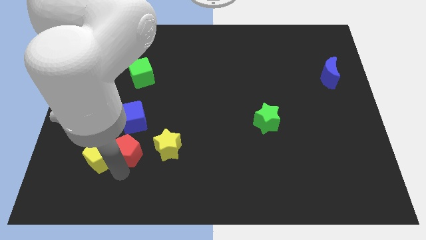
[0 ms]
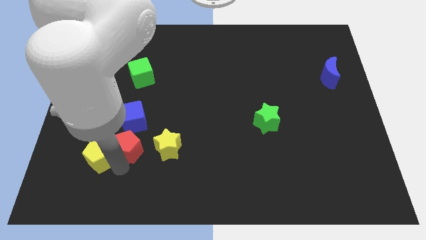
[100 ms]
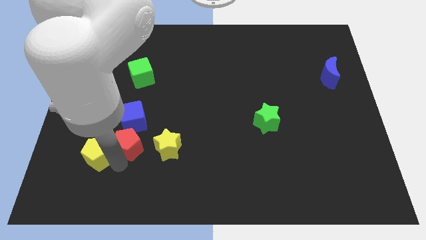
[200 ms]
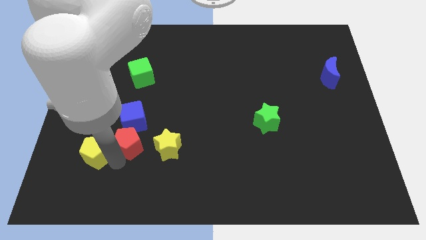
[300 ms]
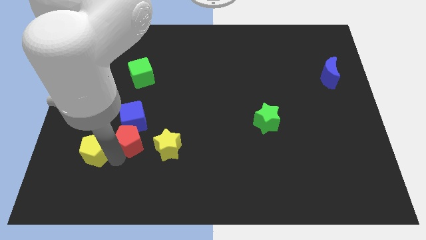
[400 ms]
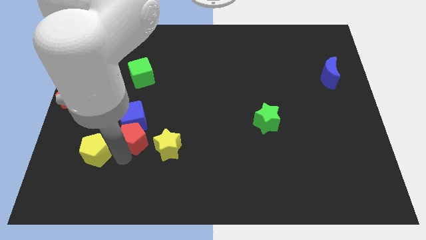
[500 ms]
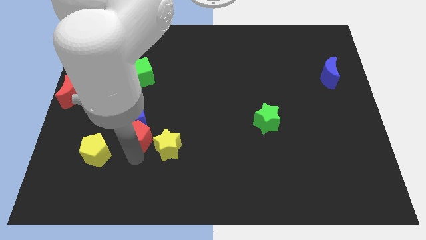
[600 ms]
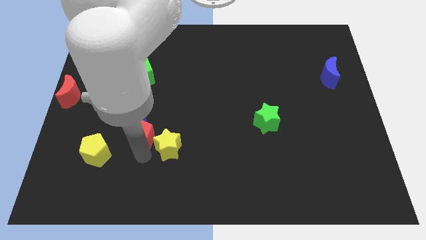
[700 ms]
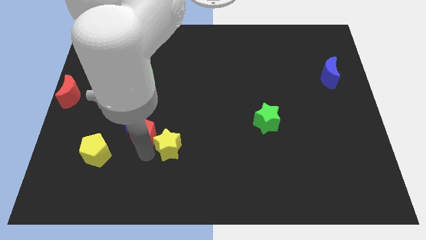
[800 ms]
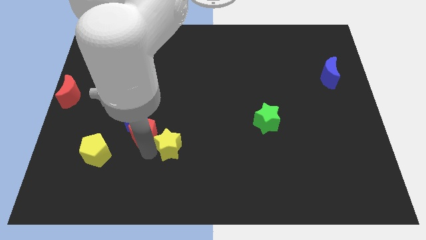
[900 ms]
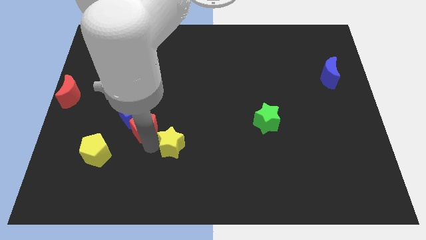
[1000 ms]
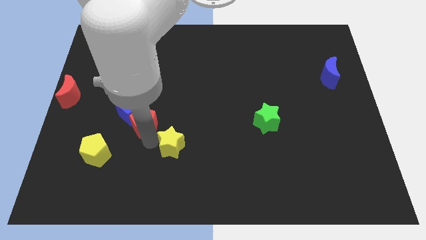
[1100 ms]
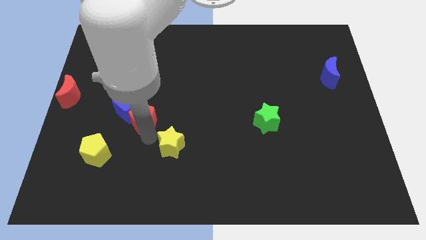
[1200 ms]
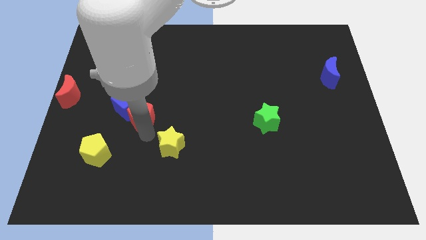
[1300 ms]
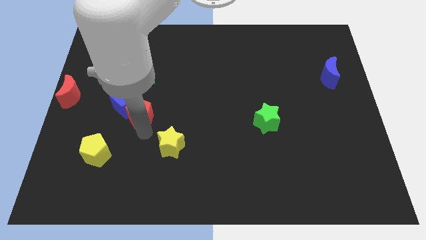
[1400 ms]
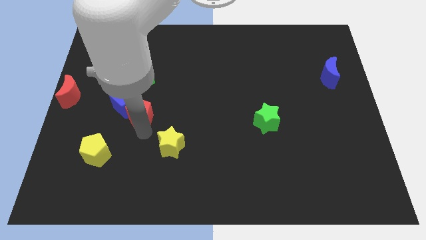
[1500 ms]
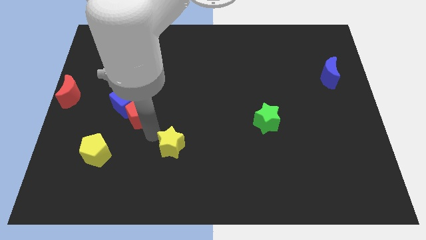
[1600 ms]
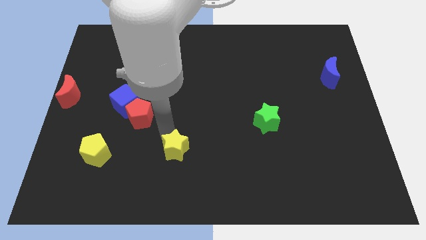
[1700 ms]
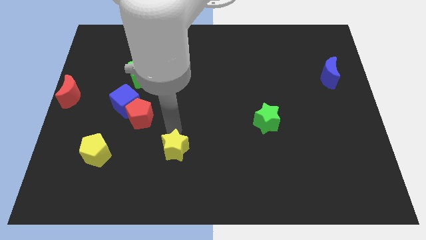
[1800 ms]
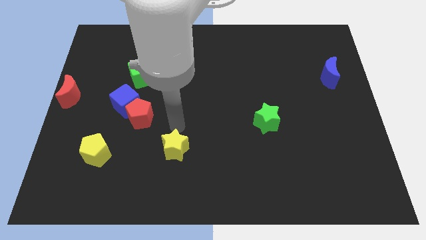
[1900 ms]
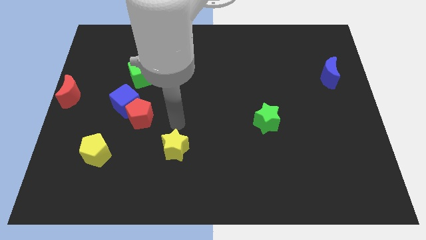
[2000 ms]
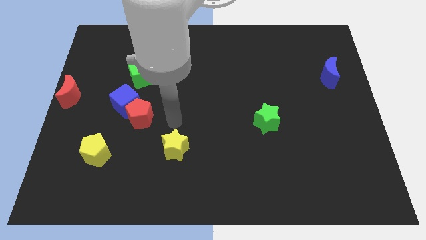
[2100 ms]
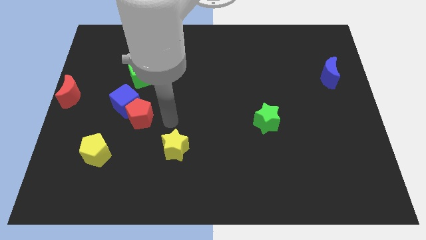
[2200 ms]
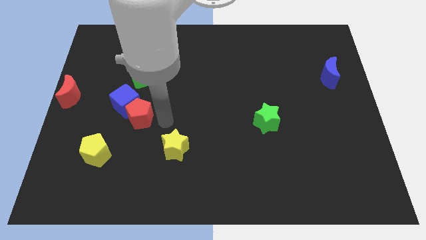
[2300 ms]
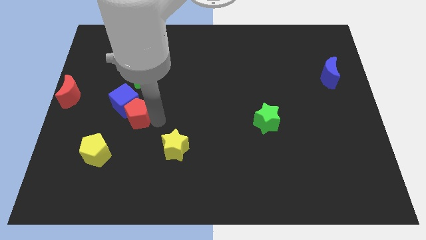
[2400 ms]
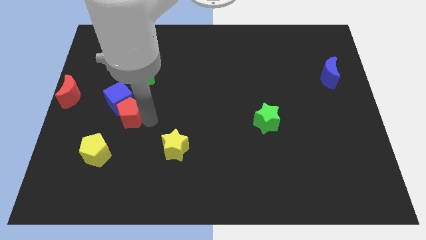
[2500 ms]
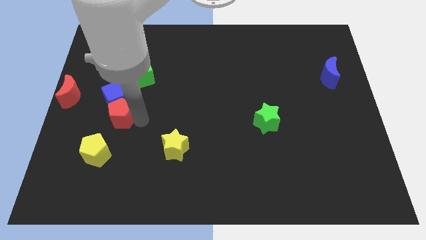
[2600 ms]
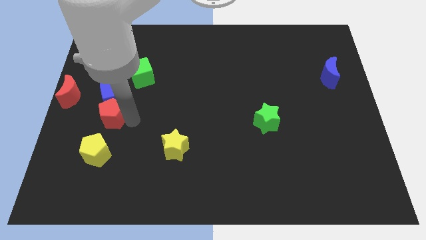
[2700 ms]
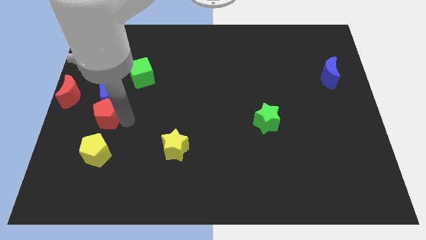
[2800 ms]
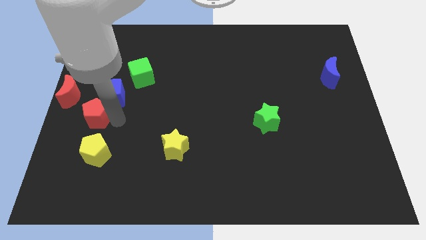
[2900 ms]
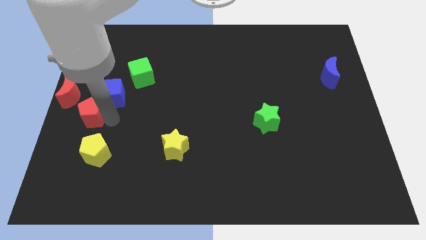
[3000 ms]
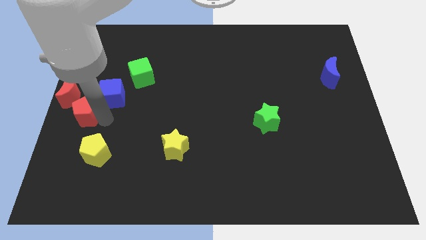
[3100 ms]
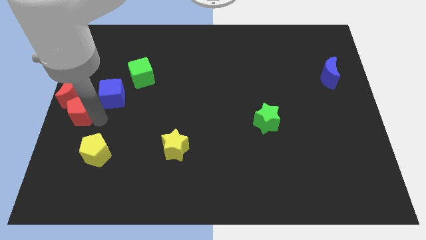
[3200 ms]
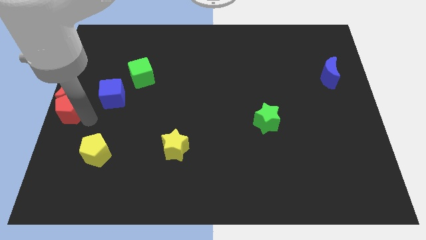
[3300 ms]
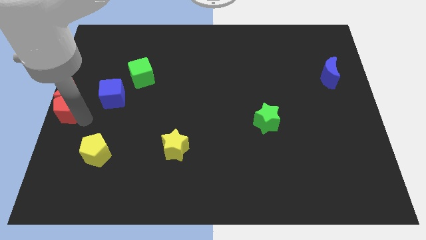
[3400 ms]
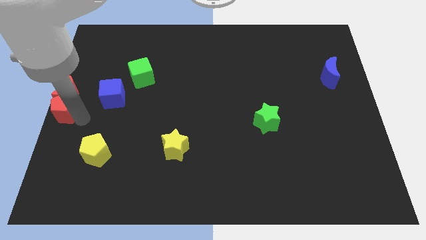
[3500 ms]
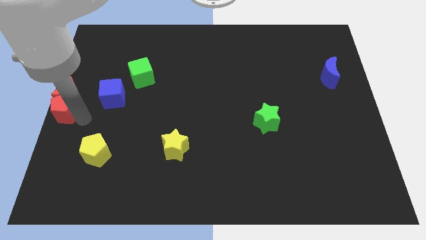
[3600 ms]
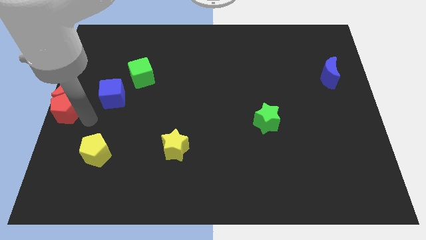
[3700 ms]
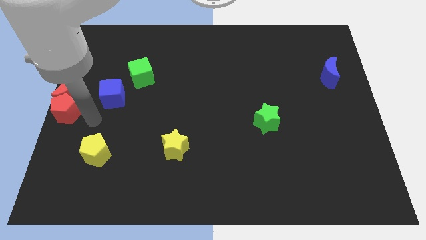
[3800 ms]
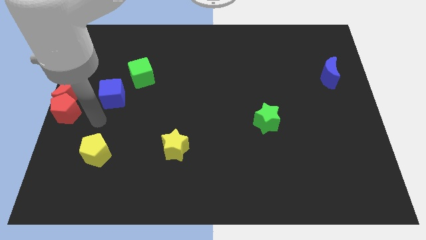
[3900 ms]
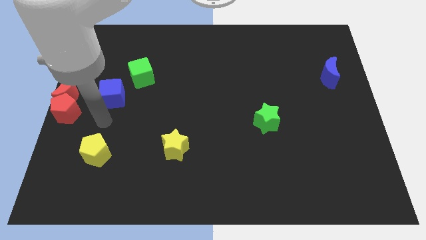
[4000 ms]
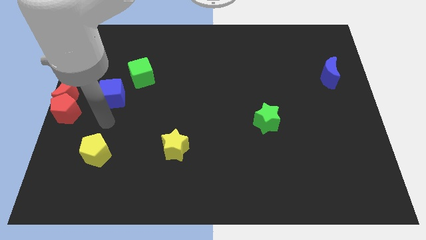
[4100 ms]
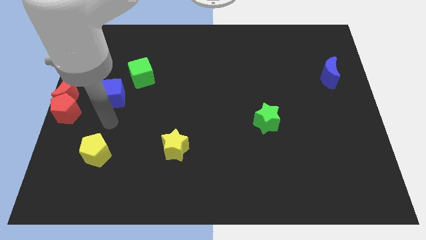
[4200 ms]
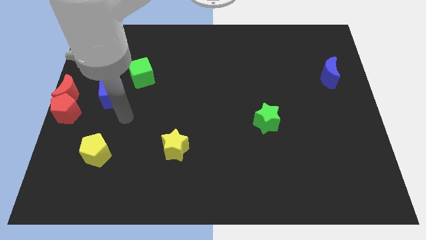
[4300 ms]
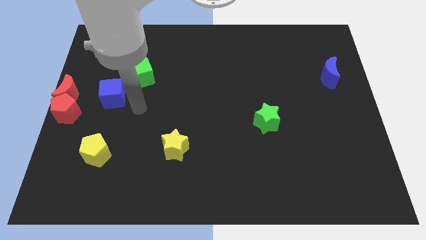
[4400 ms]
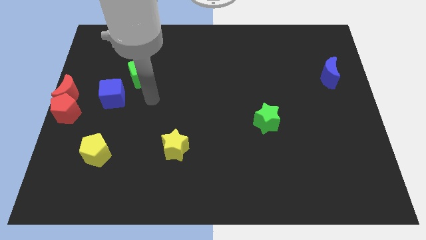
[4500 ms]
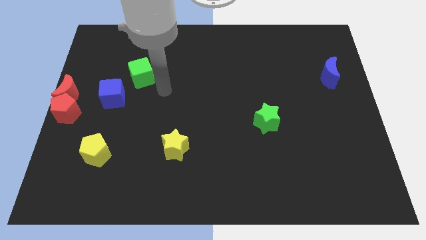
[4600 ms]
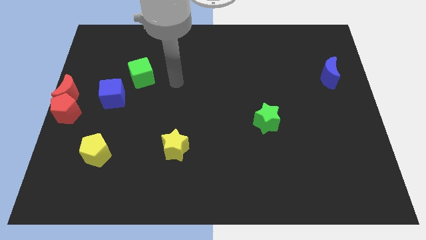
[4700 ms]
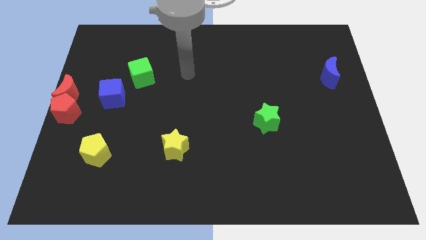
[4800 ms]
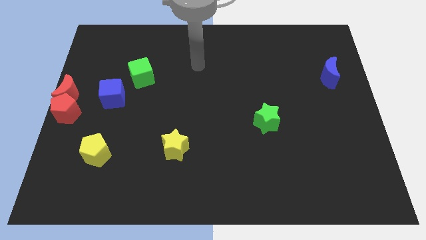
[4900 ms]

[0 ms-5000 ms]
move red pentagon below the red crescent

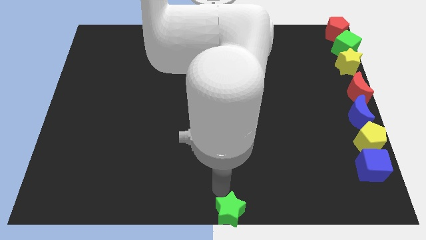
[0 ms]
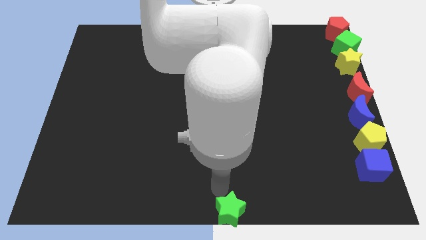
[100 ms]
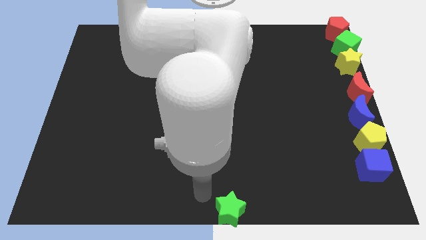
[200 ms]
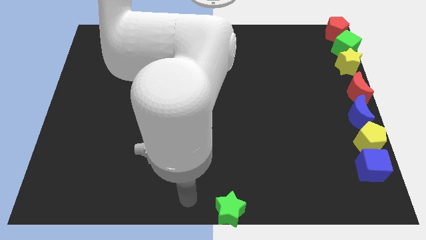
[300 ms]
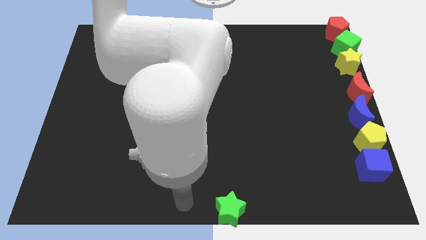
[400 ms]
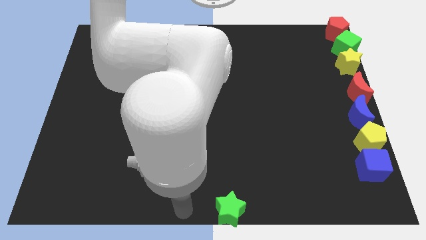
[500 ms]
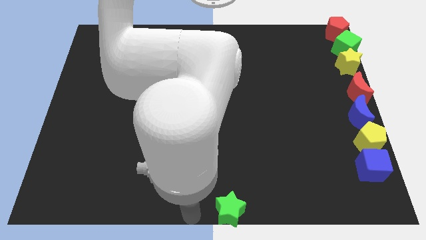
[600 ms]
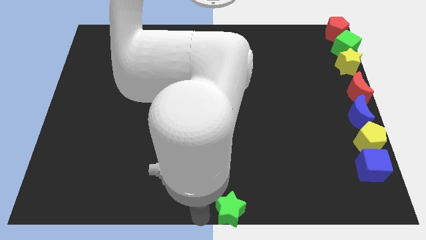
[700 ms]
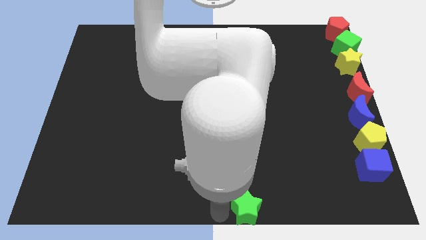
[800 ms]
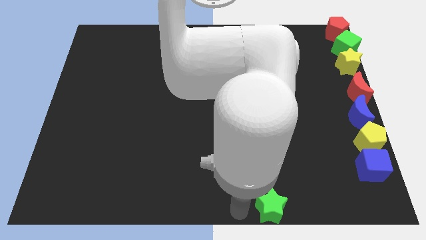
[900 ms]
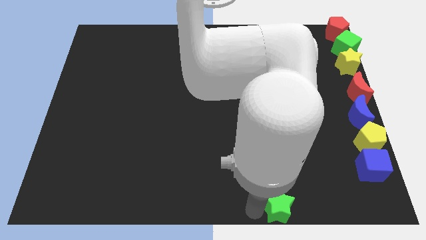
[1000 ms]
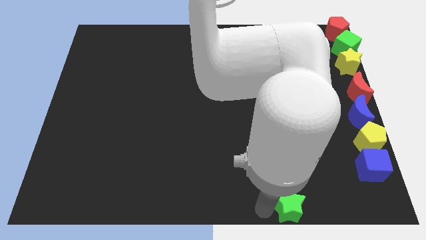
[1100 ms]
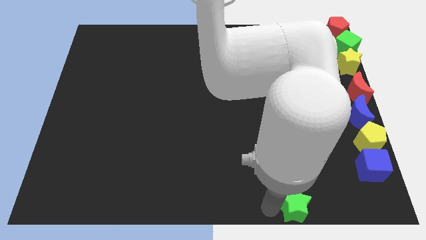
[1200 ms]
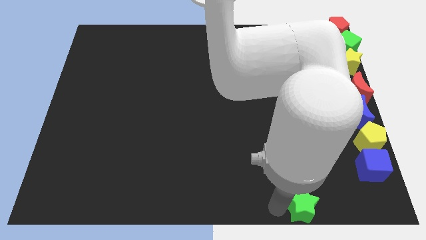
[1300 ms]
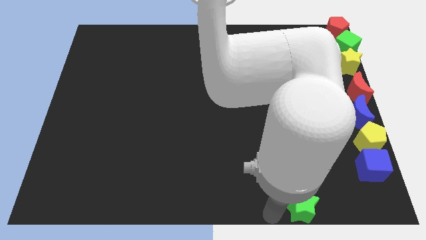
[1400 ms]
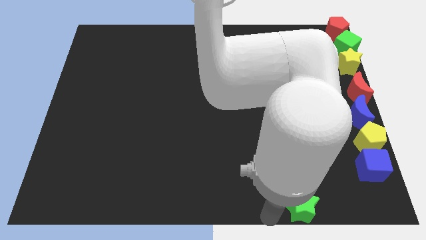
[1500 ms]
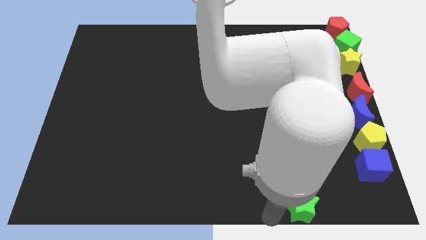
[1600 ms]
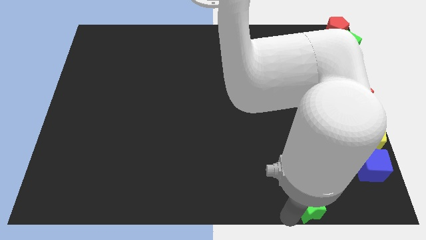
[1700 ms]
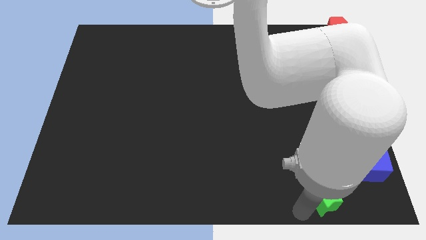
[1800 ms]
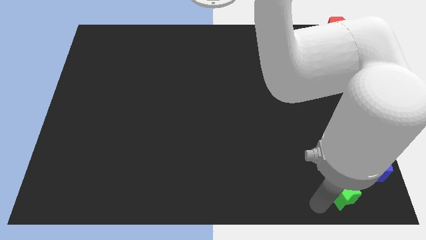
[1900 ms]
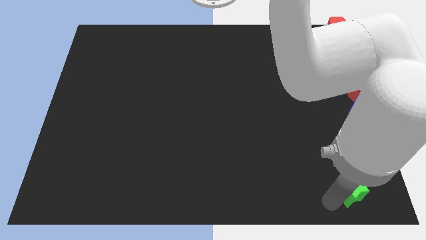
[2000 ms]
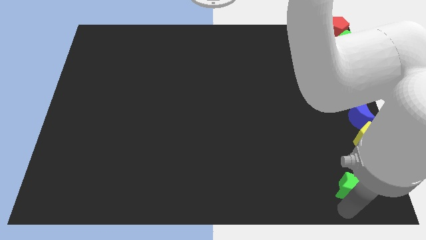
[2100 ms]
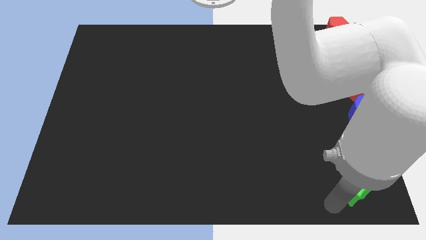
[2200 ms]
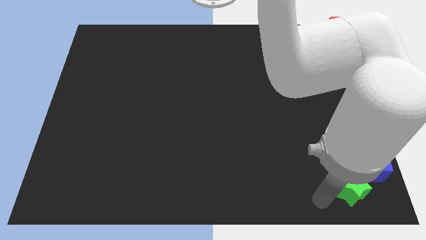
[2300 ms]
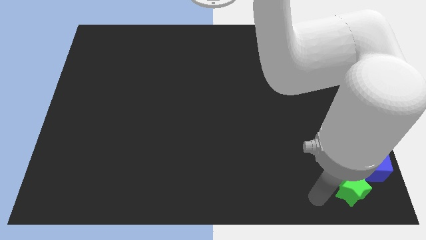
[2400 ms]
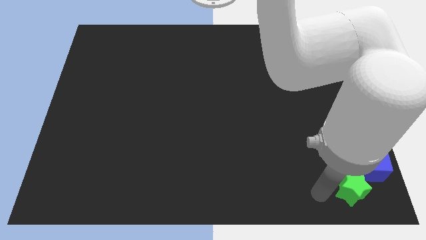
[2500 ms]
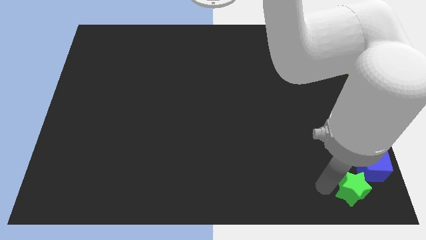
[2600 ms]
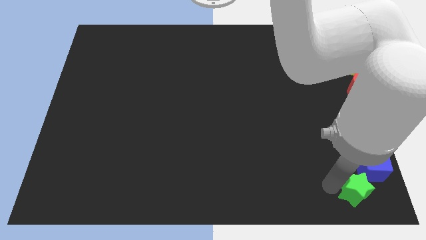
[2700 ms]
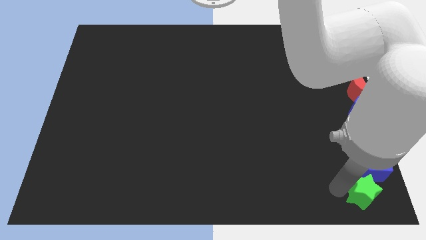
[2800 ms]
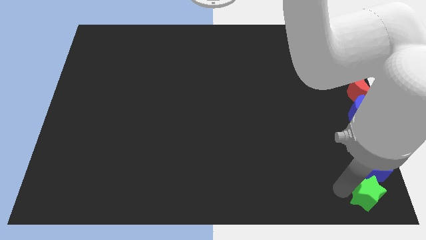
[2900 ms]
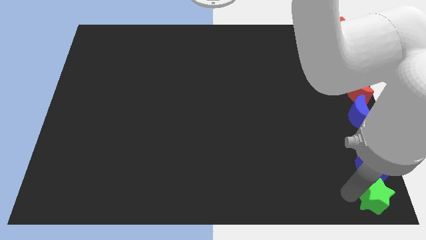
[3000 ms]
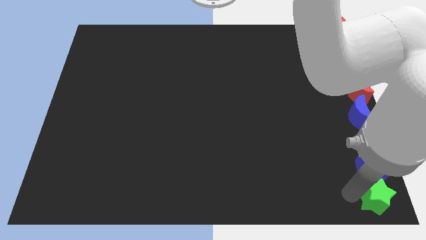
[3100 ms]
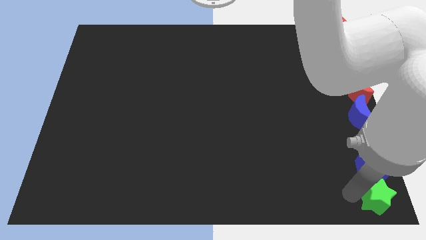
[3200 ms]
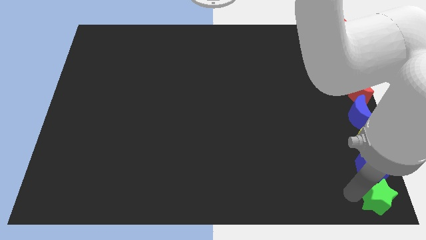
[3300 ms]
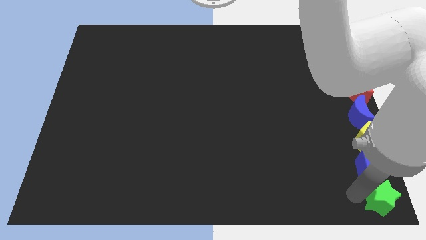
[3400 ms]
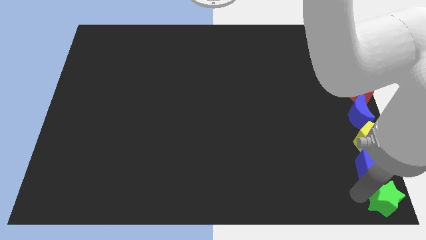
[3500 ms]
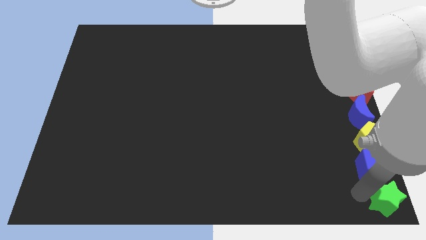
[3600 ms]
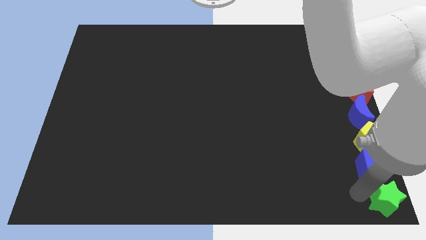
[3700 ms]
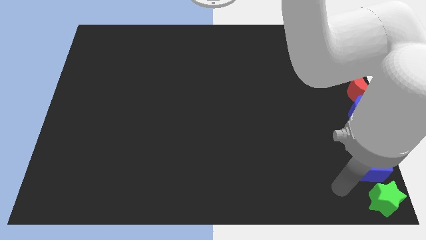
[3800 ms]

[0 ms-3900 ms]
place green star below blue cube
